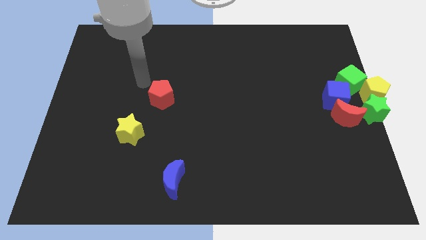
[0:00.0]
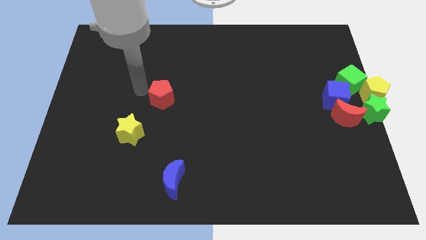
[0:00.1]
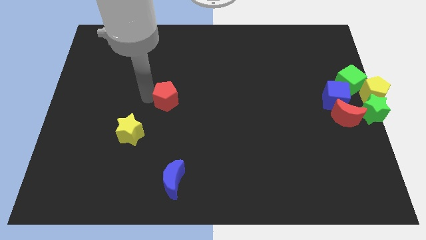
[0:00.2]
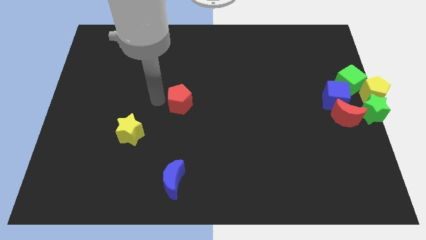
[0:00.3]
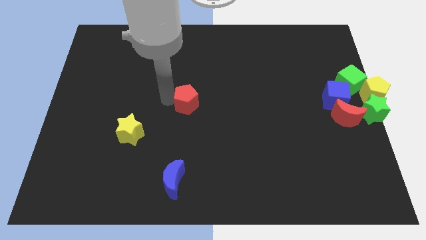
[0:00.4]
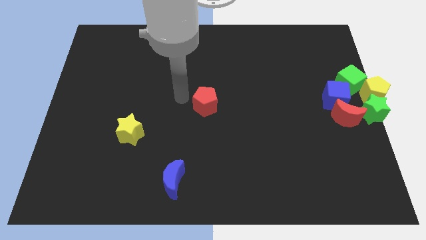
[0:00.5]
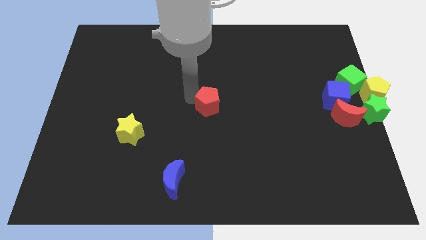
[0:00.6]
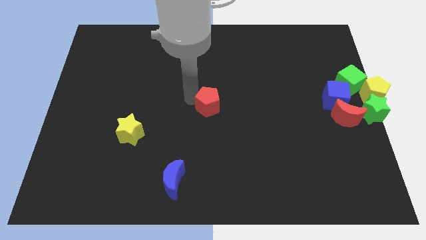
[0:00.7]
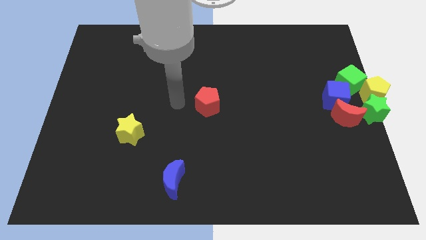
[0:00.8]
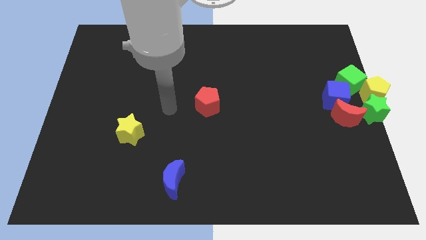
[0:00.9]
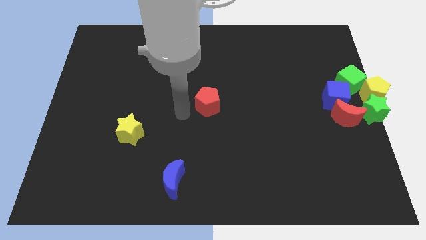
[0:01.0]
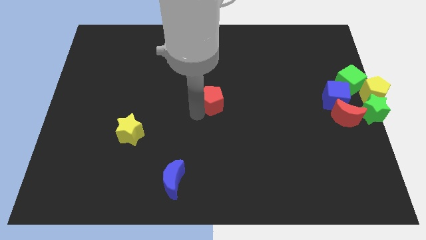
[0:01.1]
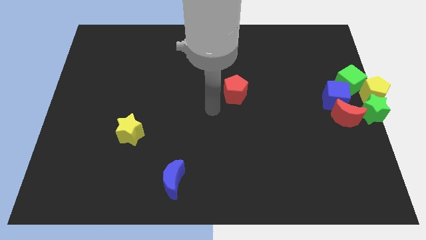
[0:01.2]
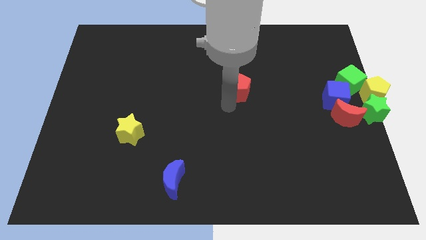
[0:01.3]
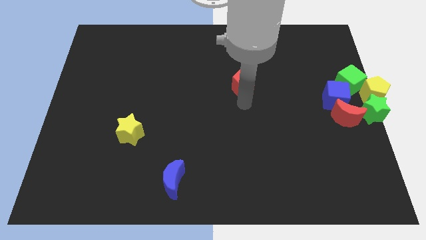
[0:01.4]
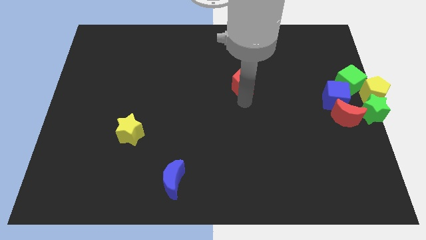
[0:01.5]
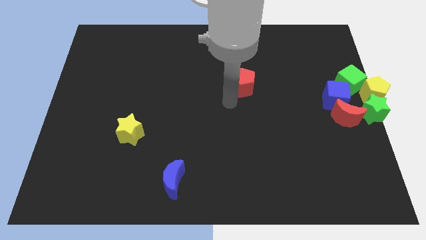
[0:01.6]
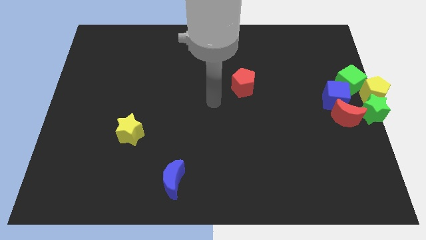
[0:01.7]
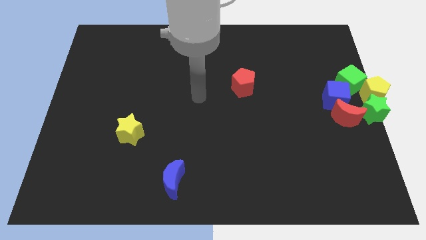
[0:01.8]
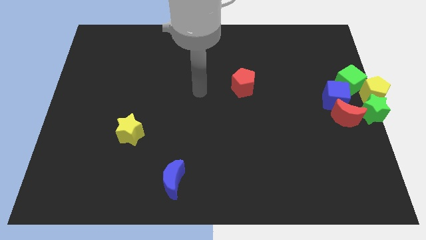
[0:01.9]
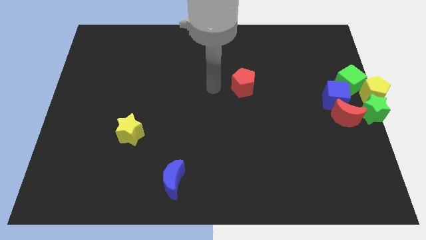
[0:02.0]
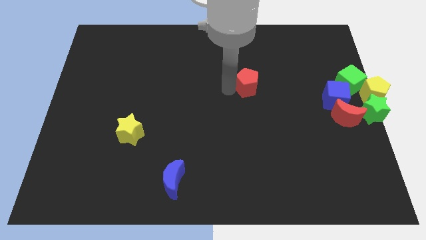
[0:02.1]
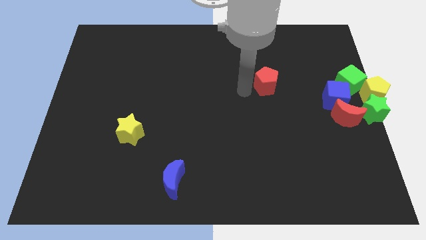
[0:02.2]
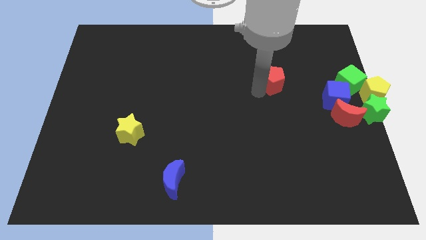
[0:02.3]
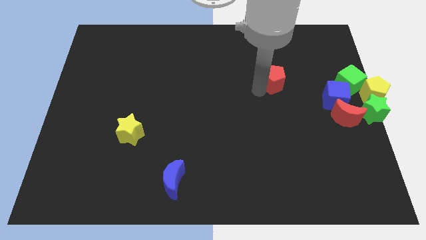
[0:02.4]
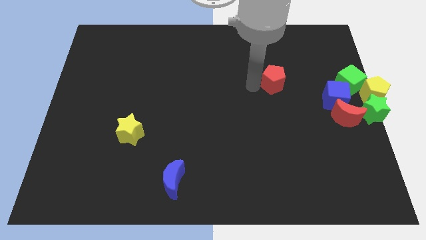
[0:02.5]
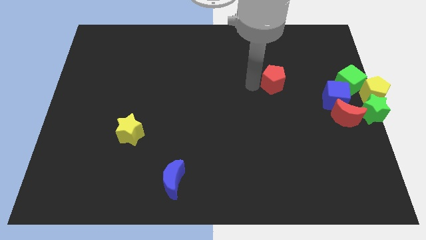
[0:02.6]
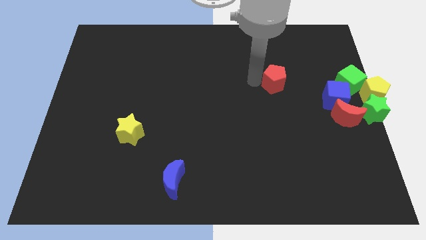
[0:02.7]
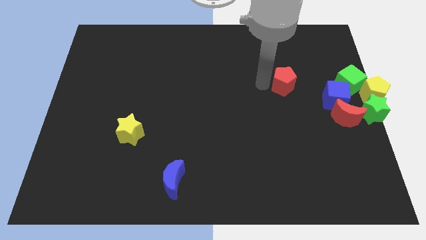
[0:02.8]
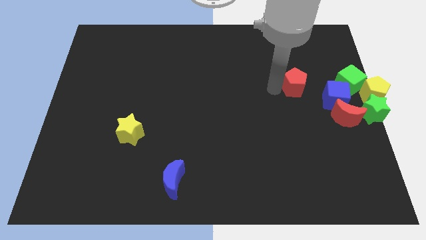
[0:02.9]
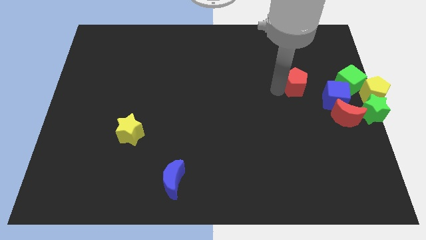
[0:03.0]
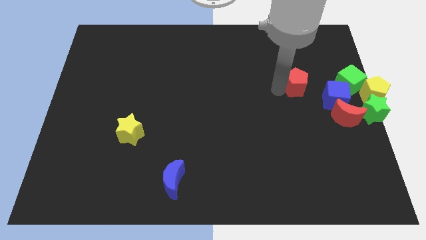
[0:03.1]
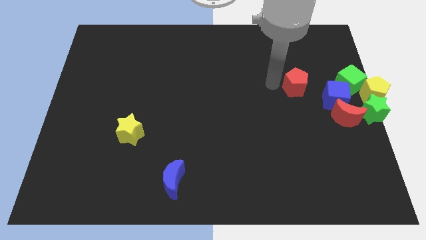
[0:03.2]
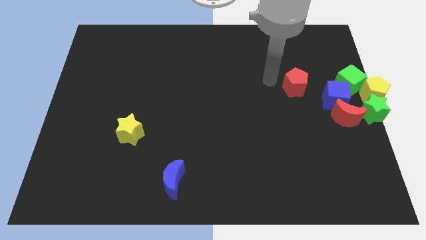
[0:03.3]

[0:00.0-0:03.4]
slide the red pentagon towards the blue cube

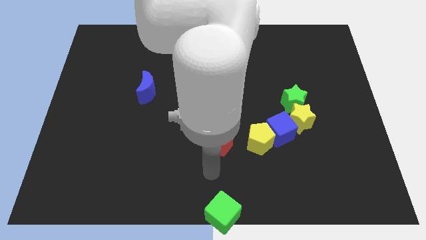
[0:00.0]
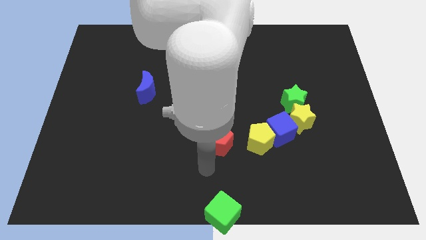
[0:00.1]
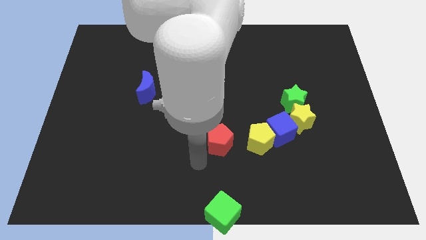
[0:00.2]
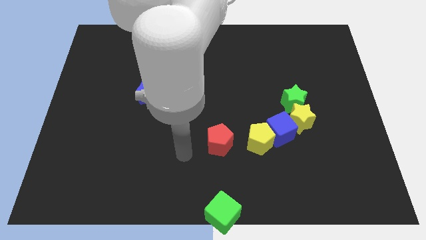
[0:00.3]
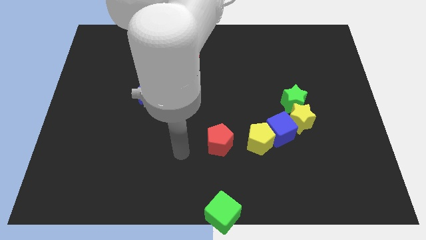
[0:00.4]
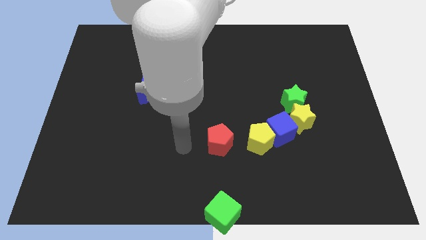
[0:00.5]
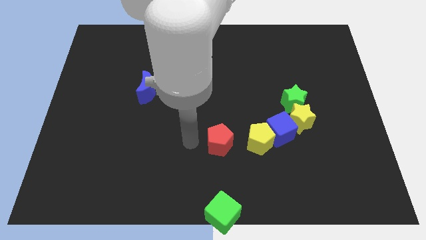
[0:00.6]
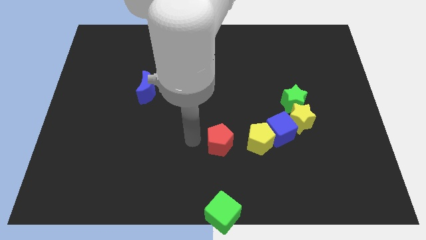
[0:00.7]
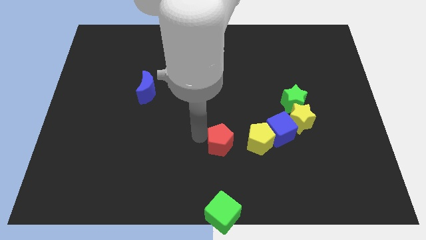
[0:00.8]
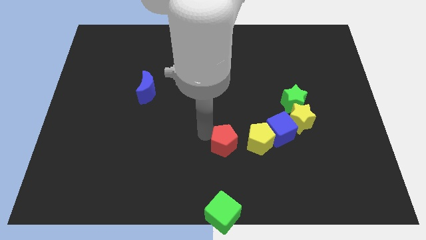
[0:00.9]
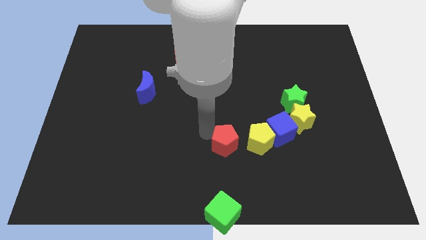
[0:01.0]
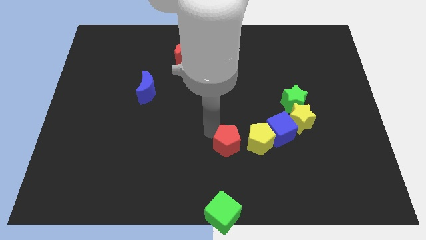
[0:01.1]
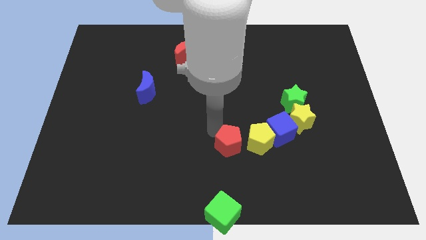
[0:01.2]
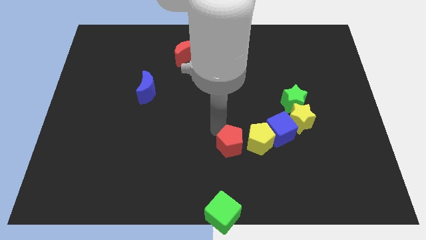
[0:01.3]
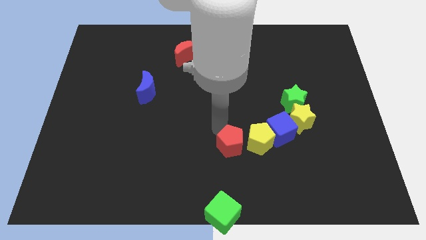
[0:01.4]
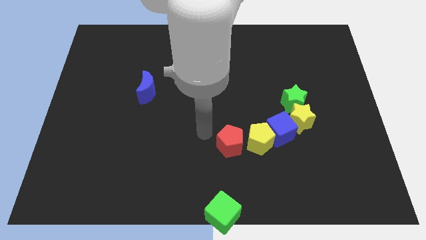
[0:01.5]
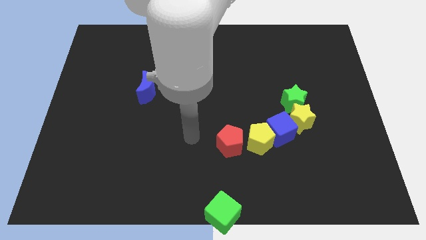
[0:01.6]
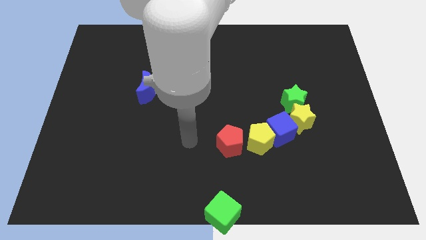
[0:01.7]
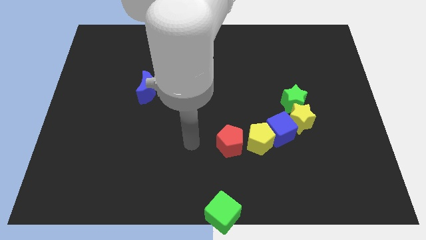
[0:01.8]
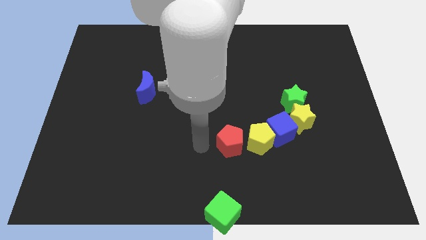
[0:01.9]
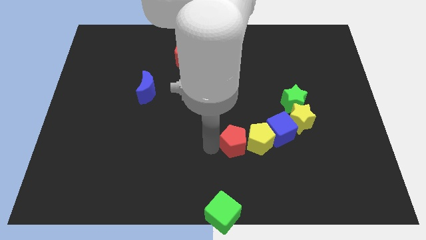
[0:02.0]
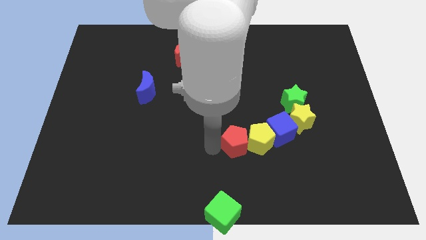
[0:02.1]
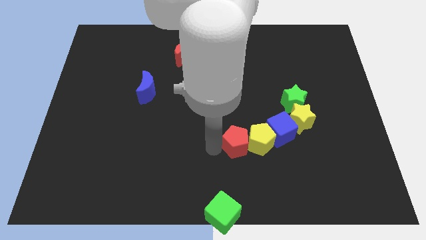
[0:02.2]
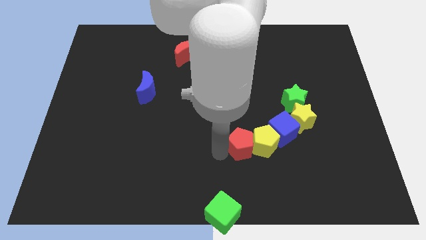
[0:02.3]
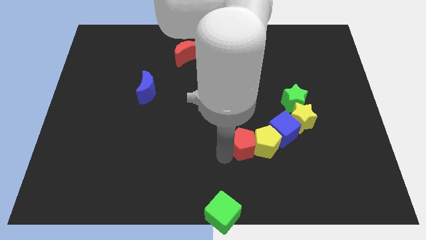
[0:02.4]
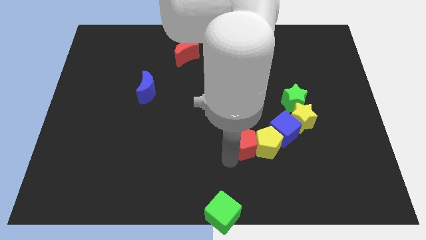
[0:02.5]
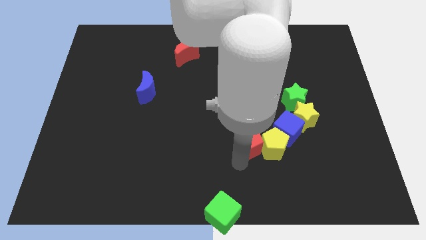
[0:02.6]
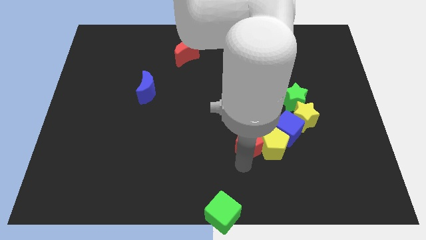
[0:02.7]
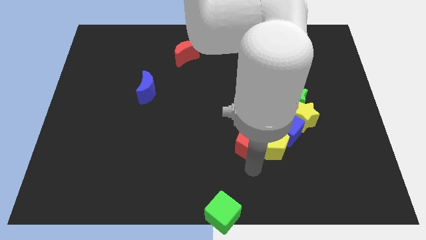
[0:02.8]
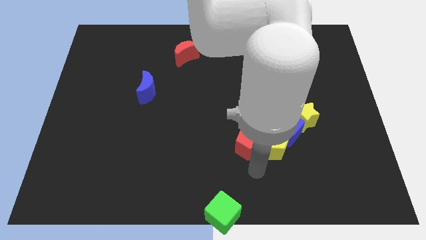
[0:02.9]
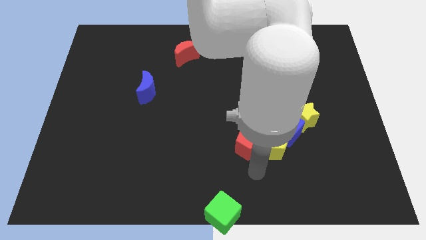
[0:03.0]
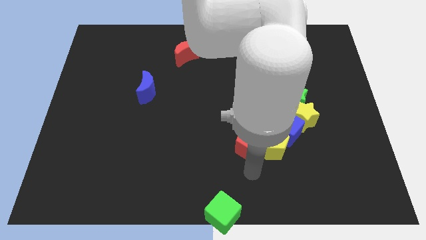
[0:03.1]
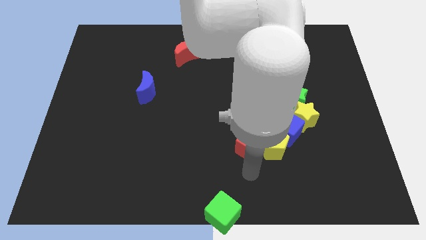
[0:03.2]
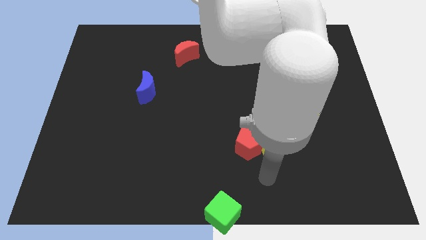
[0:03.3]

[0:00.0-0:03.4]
push the red pentagon into the yellow pentagon

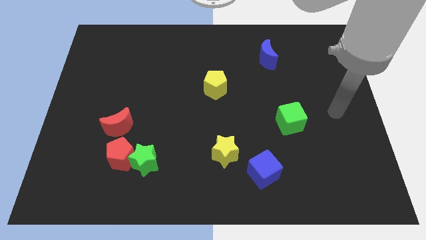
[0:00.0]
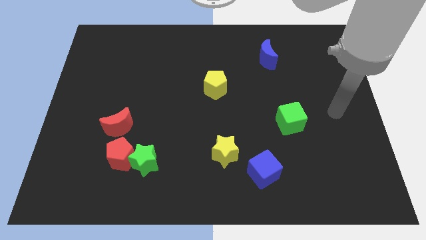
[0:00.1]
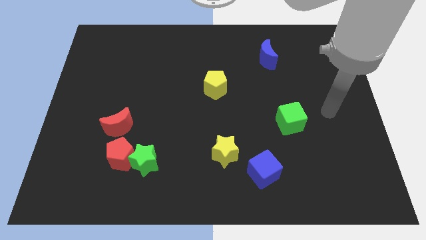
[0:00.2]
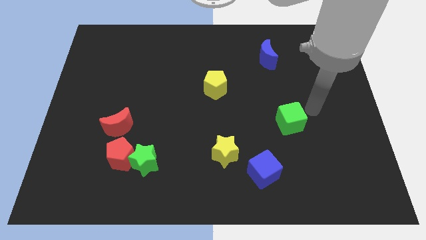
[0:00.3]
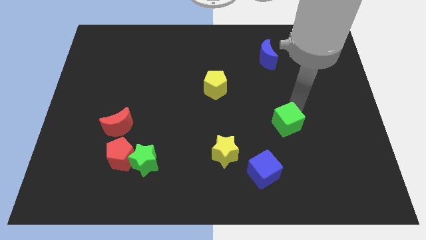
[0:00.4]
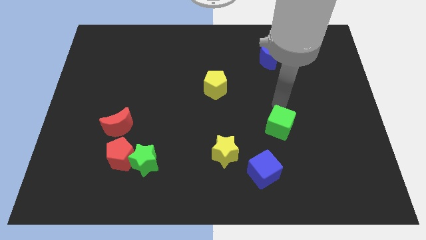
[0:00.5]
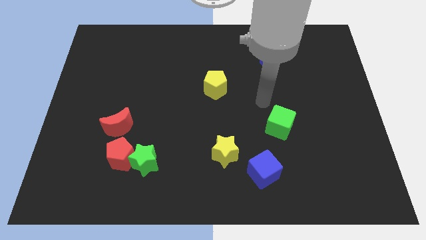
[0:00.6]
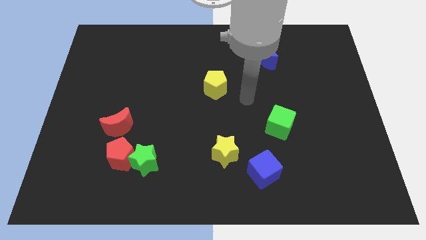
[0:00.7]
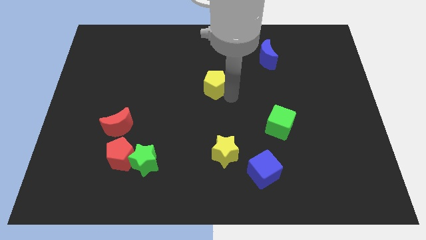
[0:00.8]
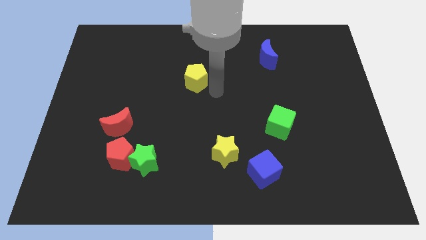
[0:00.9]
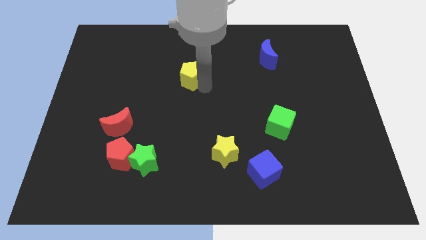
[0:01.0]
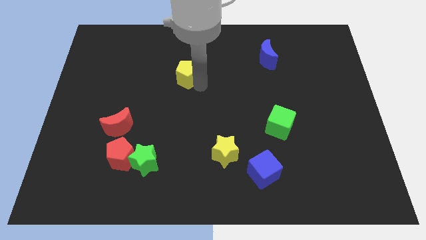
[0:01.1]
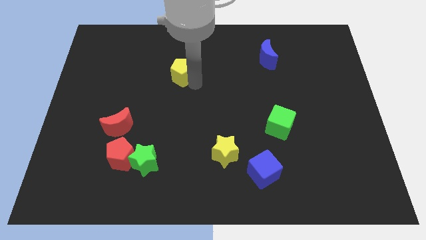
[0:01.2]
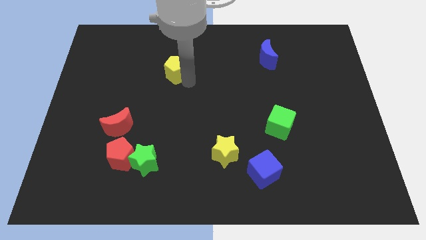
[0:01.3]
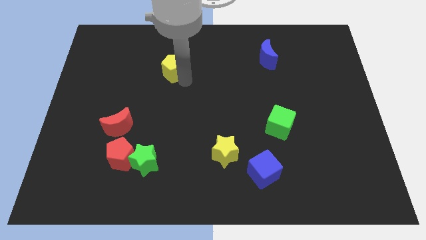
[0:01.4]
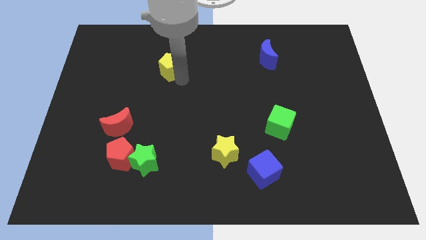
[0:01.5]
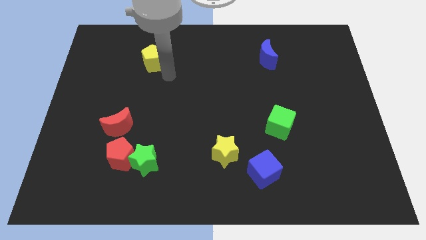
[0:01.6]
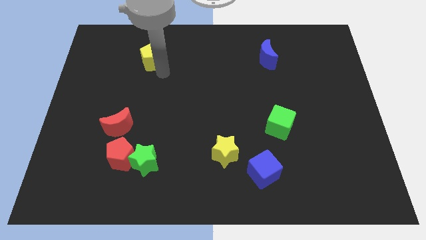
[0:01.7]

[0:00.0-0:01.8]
push the yellow pentagon to the vertical top side of the green star

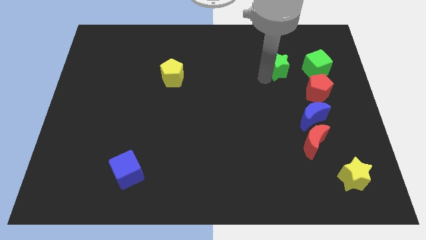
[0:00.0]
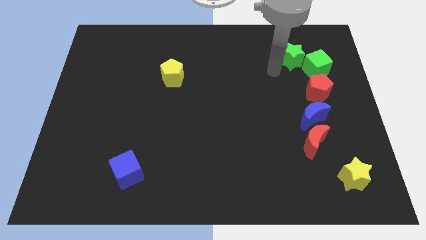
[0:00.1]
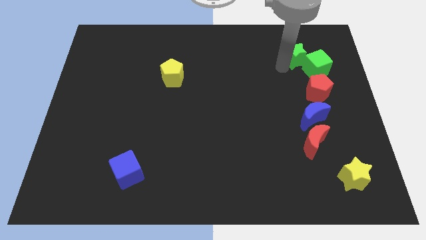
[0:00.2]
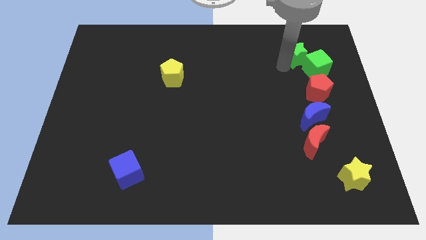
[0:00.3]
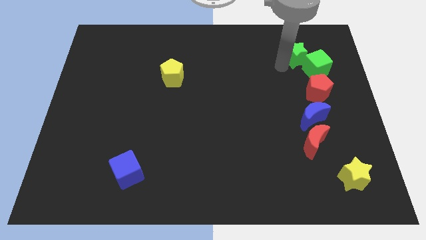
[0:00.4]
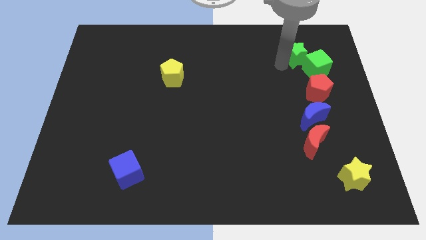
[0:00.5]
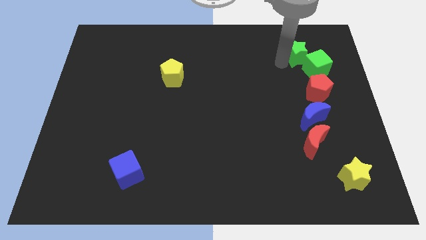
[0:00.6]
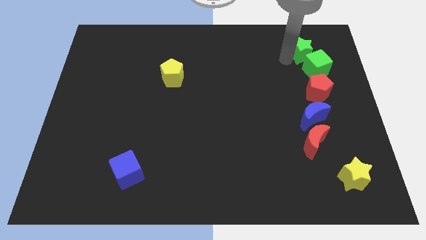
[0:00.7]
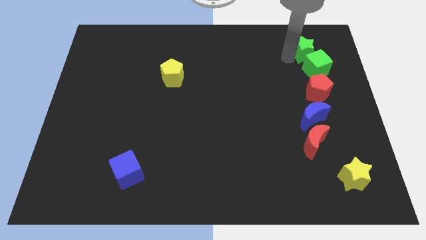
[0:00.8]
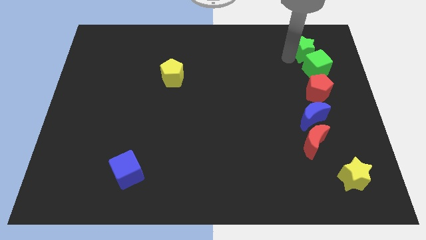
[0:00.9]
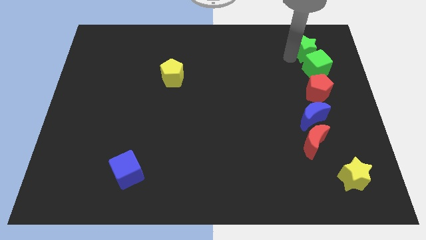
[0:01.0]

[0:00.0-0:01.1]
push the green star above the green cube
